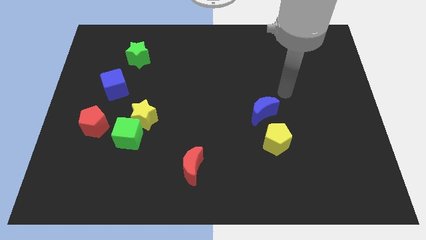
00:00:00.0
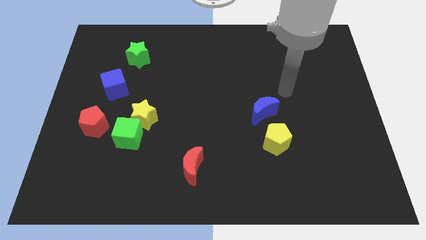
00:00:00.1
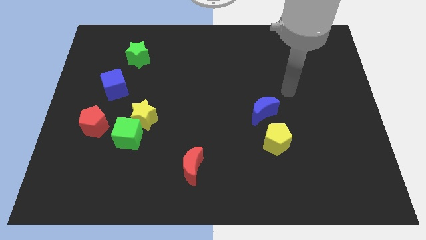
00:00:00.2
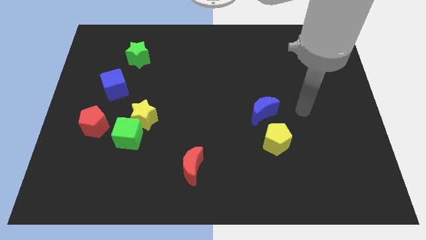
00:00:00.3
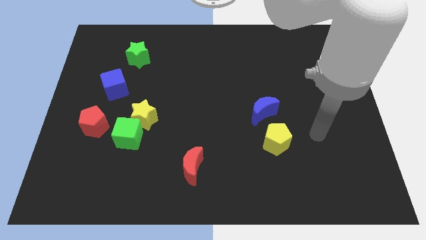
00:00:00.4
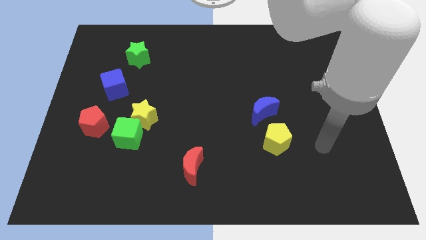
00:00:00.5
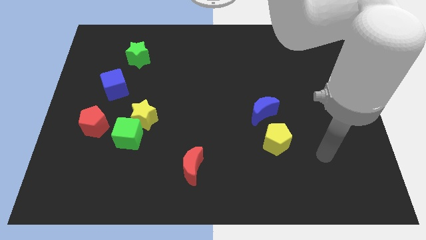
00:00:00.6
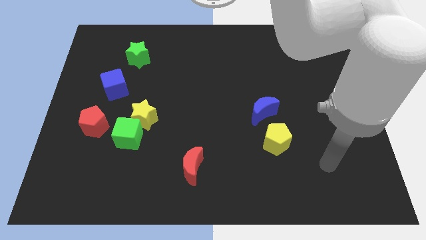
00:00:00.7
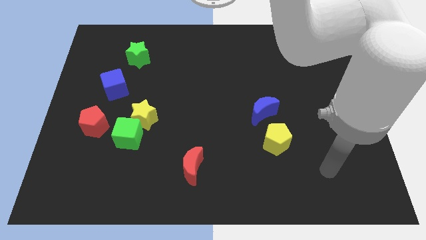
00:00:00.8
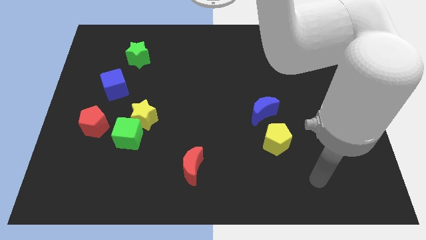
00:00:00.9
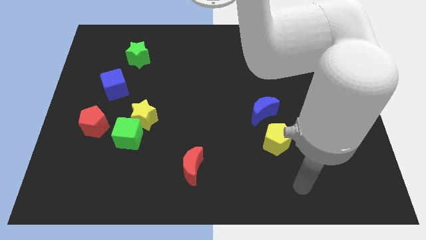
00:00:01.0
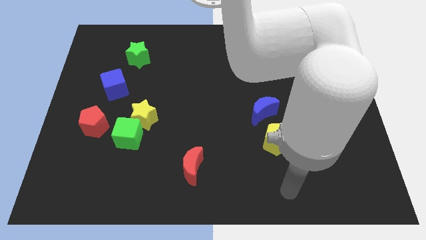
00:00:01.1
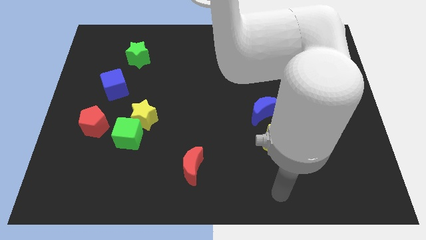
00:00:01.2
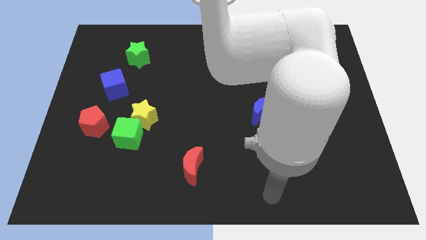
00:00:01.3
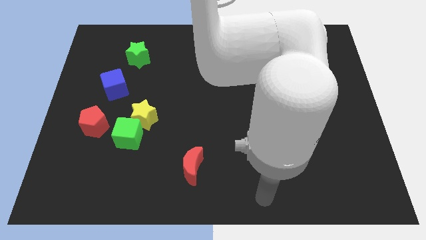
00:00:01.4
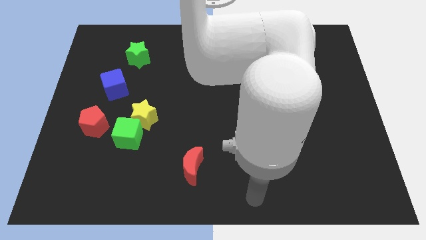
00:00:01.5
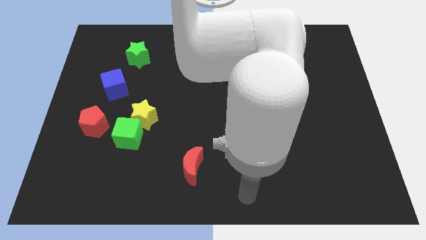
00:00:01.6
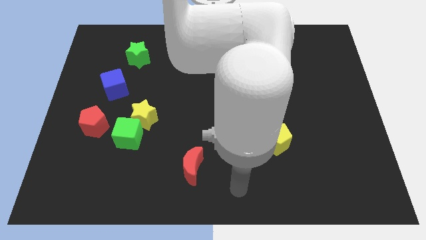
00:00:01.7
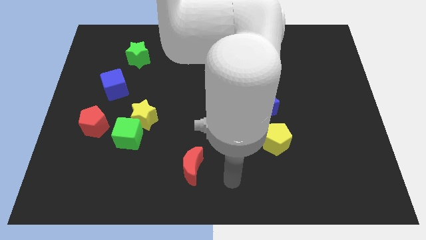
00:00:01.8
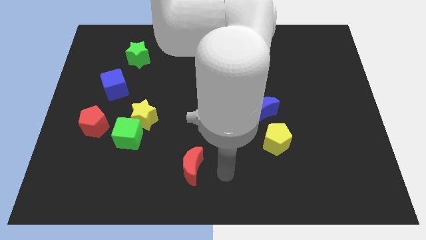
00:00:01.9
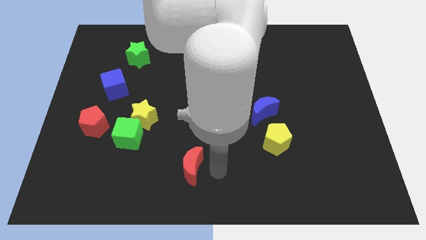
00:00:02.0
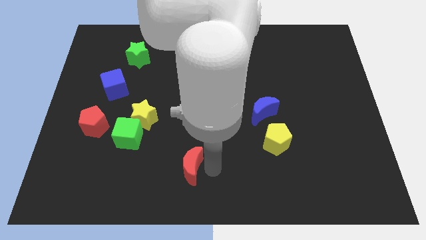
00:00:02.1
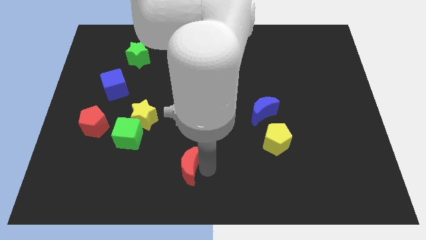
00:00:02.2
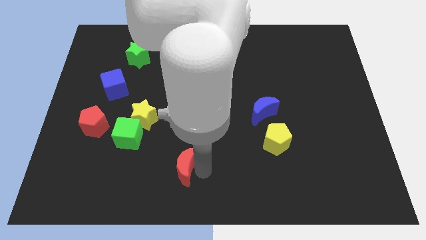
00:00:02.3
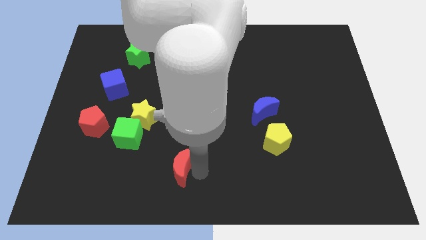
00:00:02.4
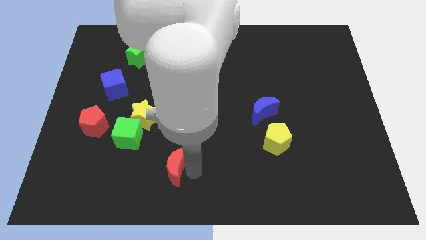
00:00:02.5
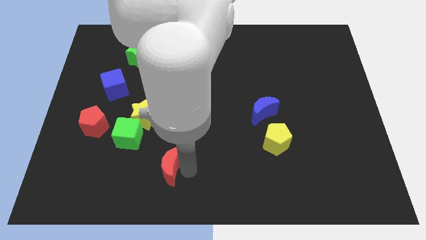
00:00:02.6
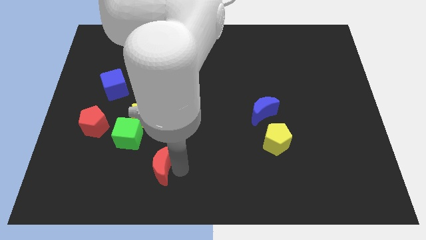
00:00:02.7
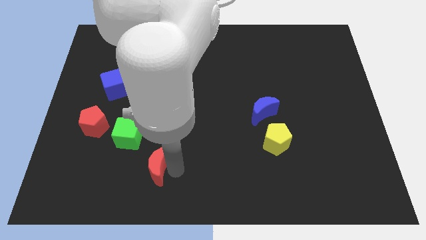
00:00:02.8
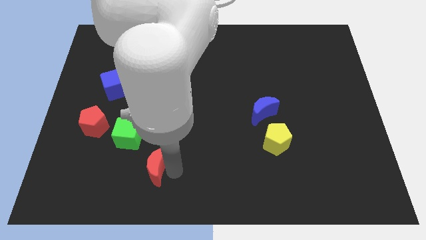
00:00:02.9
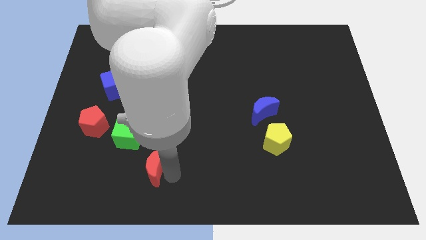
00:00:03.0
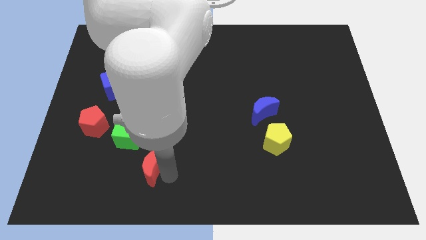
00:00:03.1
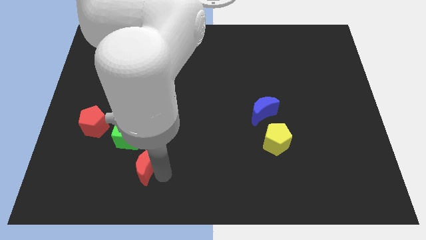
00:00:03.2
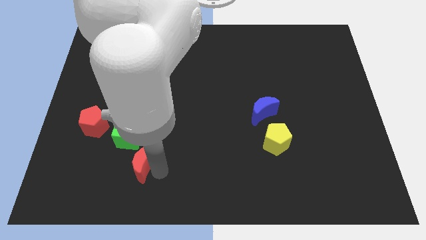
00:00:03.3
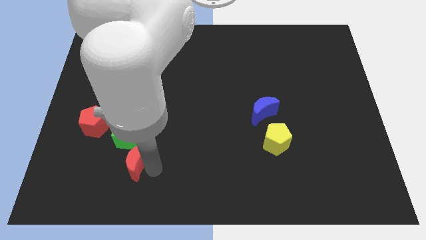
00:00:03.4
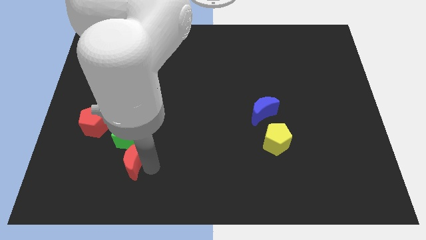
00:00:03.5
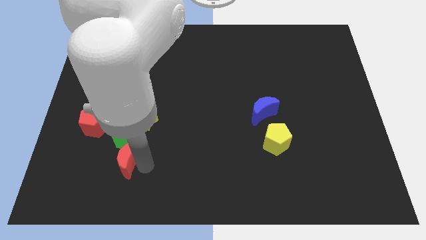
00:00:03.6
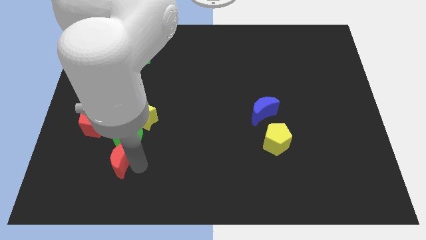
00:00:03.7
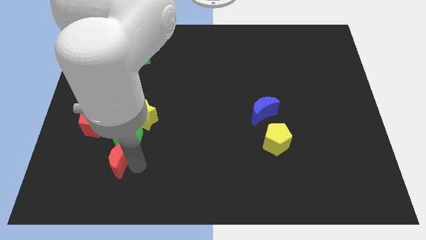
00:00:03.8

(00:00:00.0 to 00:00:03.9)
move the red moon next to the green cube

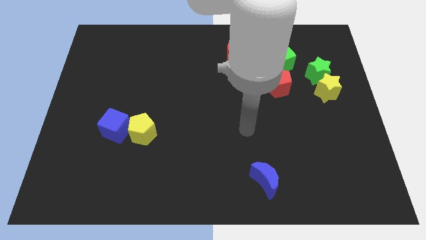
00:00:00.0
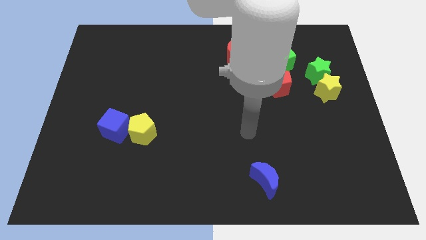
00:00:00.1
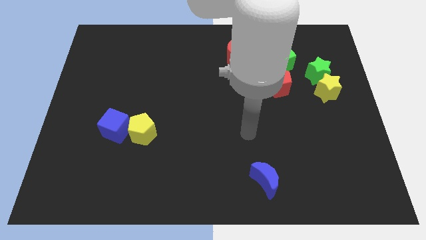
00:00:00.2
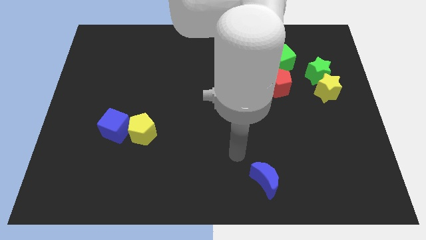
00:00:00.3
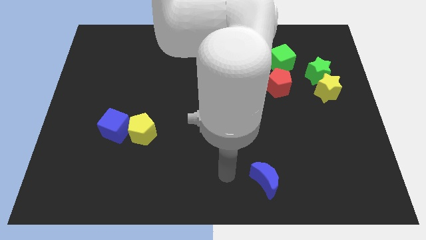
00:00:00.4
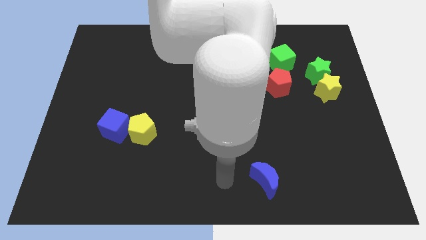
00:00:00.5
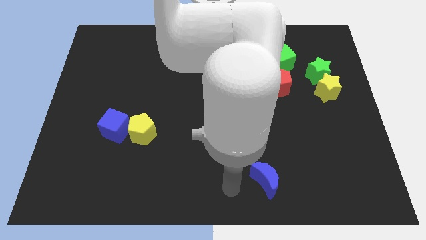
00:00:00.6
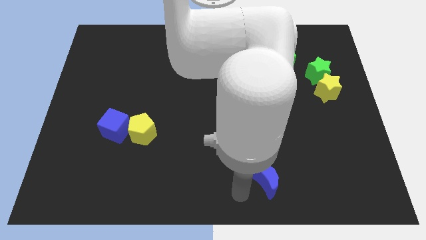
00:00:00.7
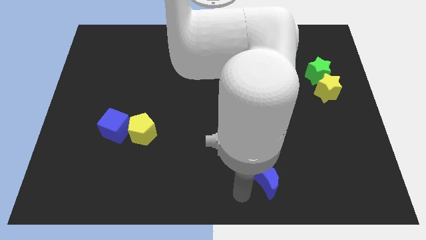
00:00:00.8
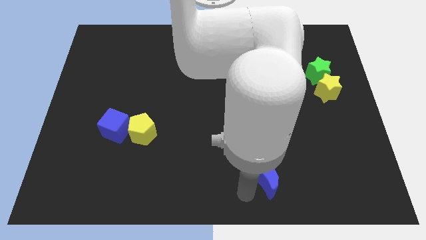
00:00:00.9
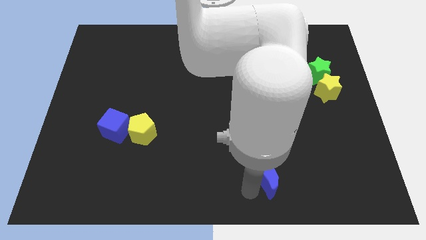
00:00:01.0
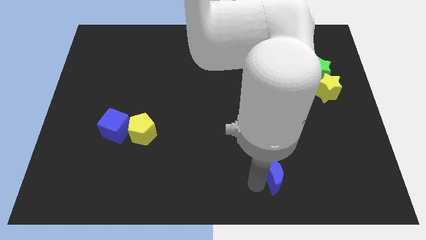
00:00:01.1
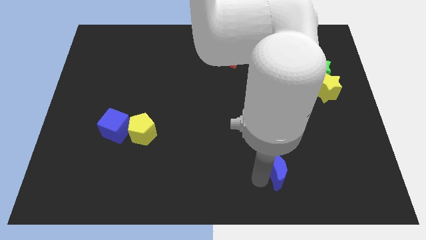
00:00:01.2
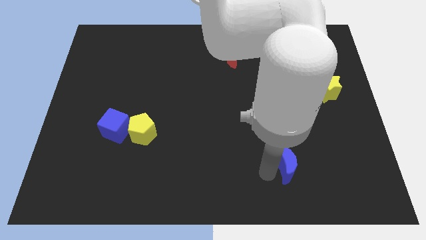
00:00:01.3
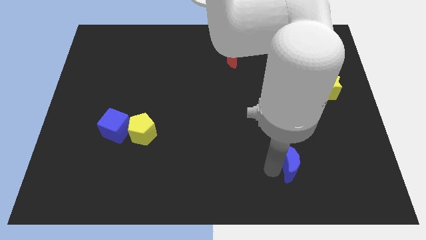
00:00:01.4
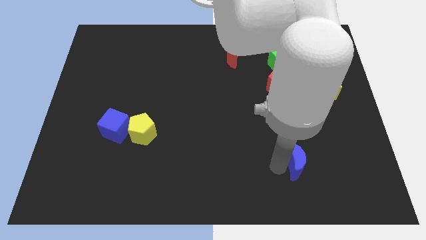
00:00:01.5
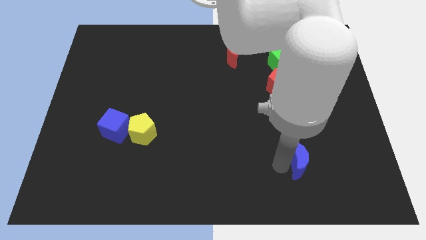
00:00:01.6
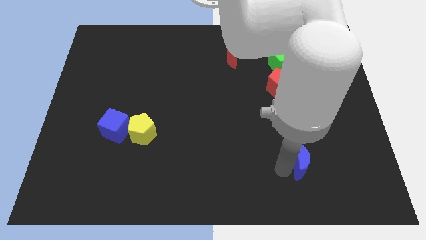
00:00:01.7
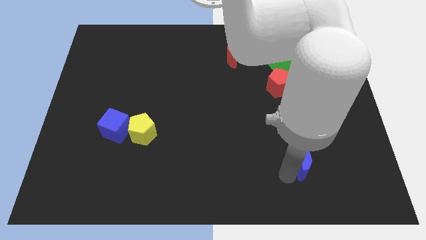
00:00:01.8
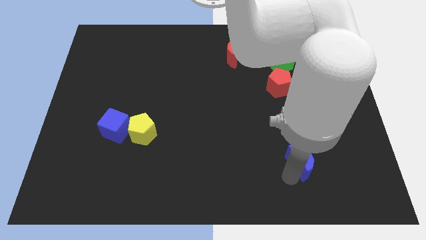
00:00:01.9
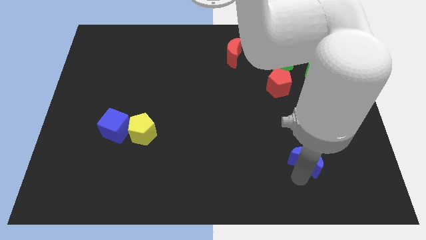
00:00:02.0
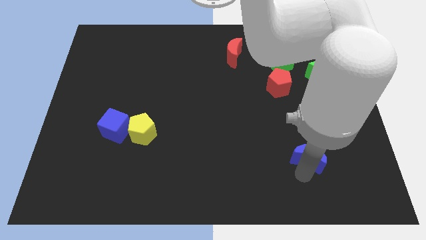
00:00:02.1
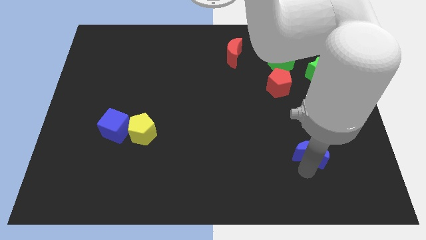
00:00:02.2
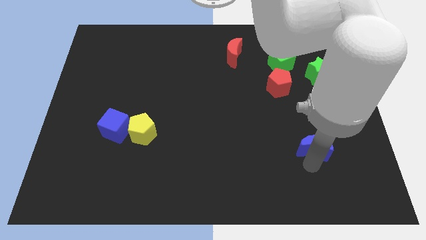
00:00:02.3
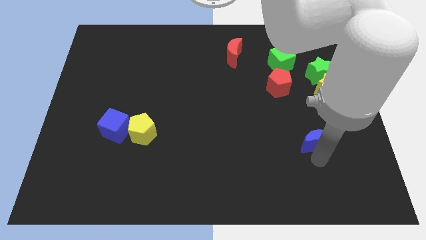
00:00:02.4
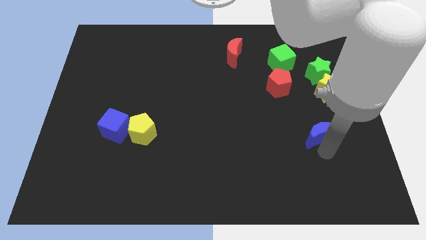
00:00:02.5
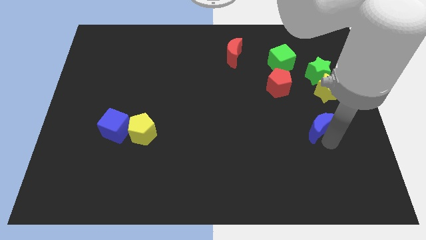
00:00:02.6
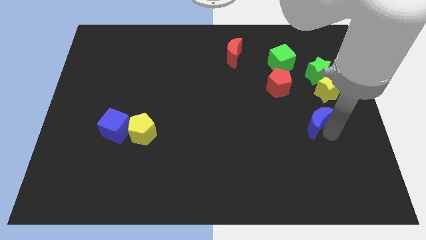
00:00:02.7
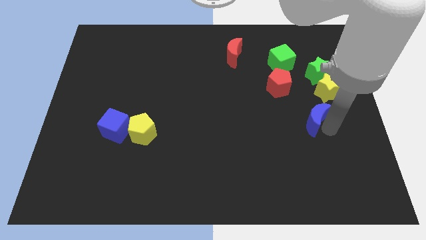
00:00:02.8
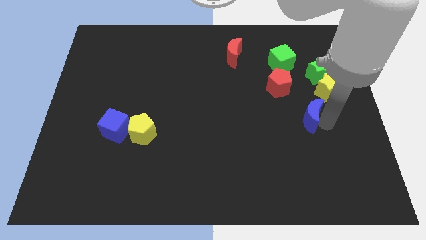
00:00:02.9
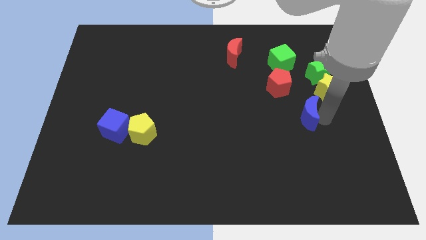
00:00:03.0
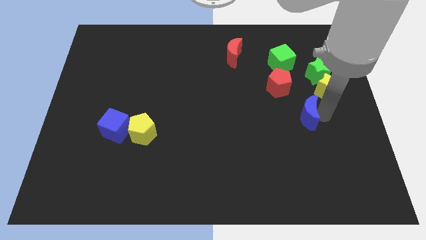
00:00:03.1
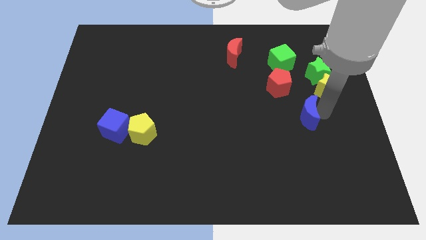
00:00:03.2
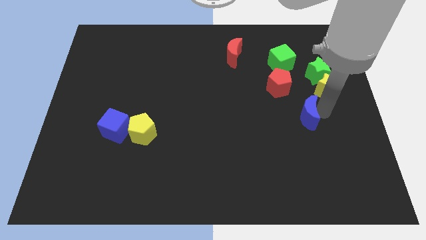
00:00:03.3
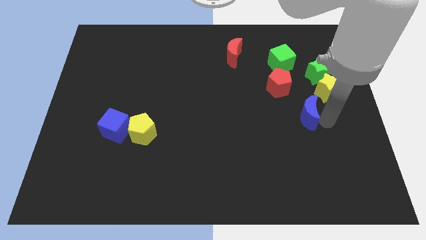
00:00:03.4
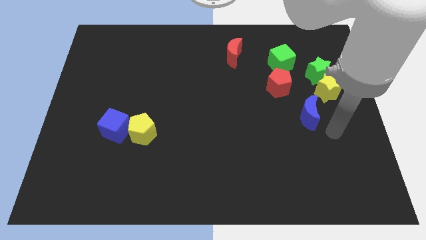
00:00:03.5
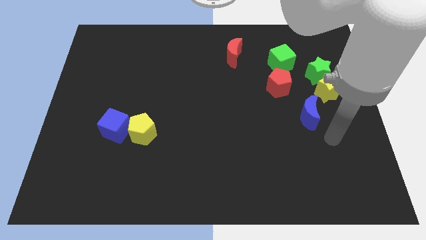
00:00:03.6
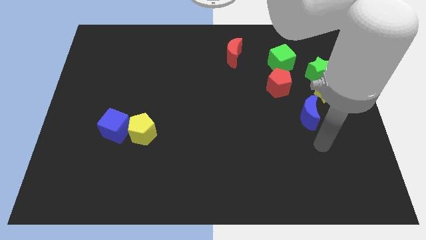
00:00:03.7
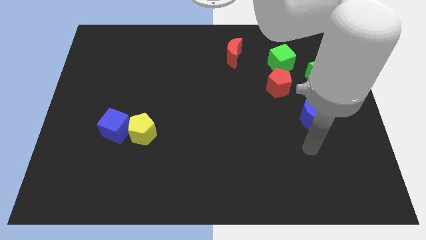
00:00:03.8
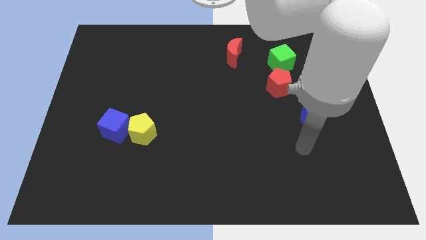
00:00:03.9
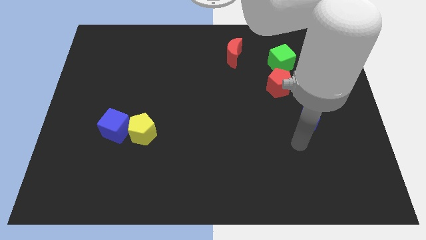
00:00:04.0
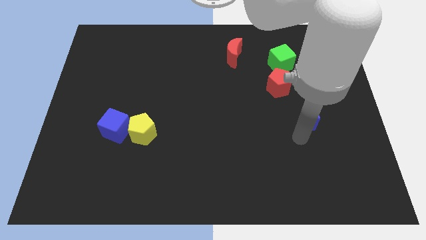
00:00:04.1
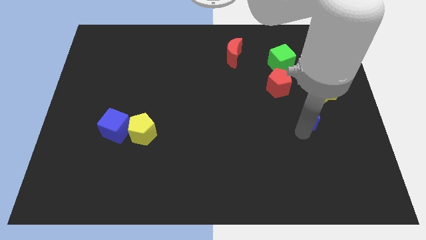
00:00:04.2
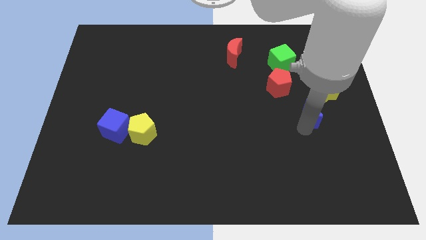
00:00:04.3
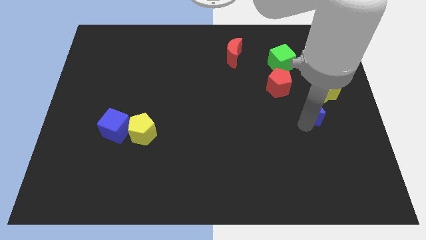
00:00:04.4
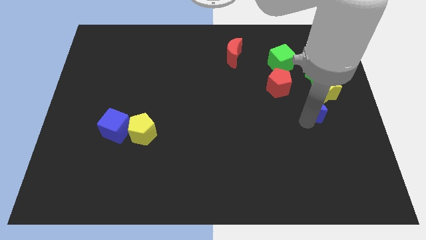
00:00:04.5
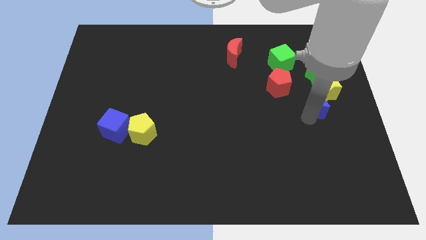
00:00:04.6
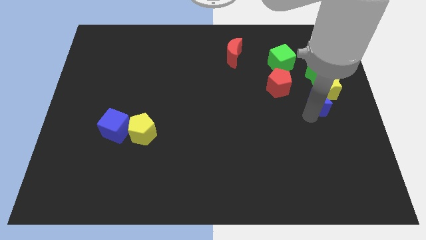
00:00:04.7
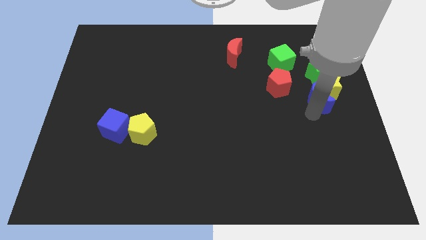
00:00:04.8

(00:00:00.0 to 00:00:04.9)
move the blue moon next to the yellow star
